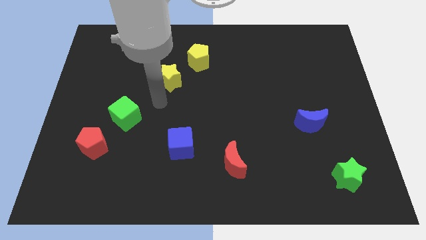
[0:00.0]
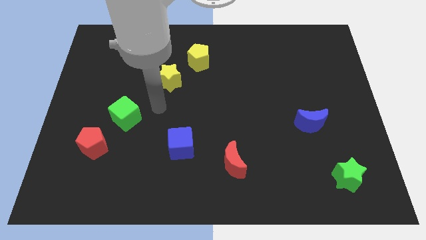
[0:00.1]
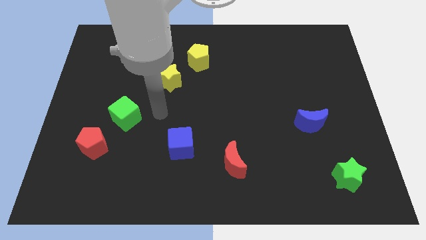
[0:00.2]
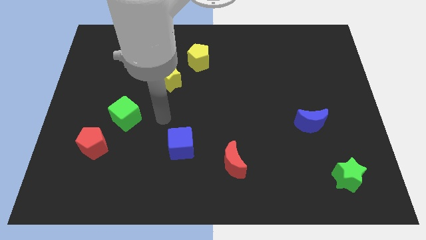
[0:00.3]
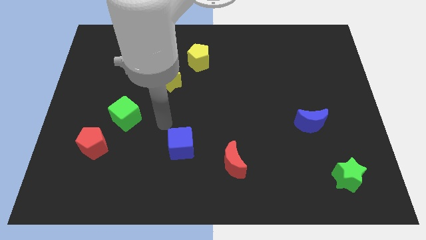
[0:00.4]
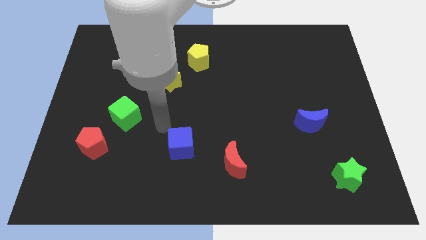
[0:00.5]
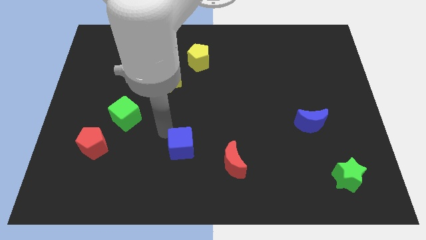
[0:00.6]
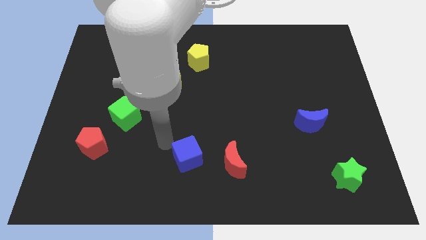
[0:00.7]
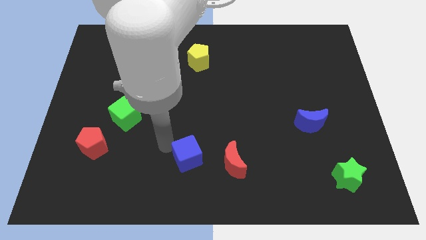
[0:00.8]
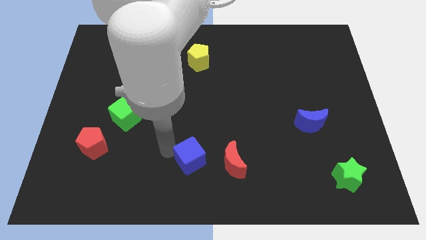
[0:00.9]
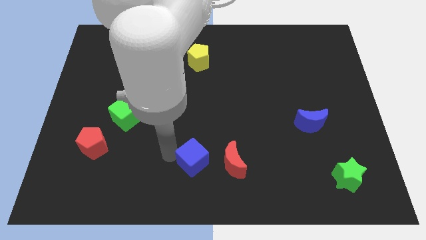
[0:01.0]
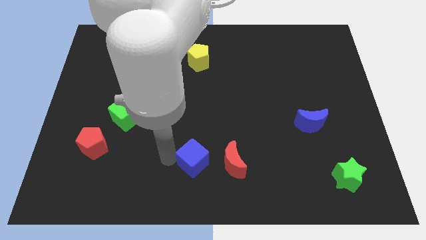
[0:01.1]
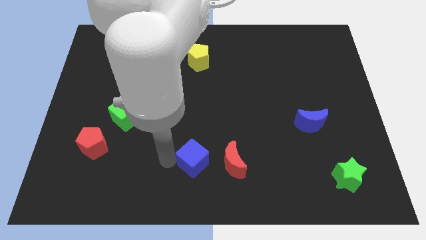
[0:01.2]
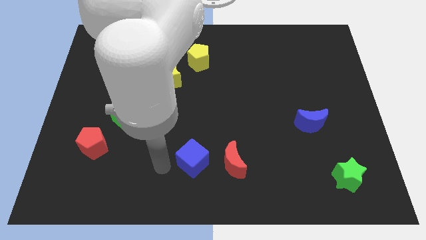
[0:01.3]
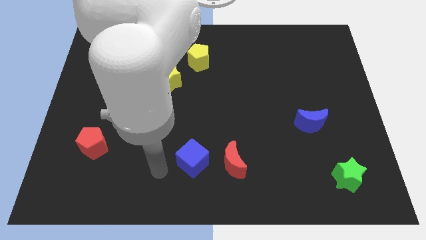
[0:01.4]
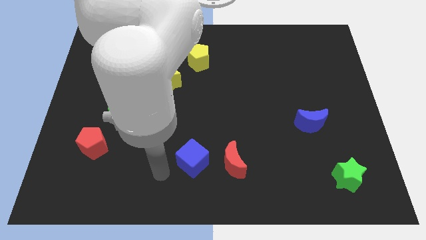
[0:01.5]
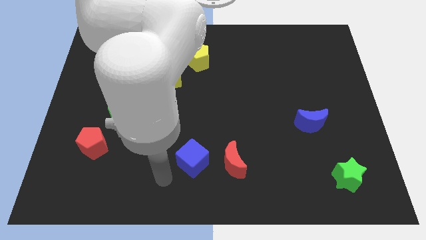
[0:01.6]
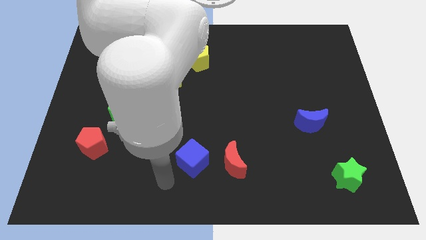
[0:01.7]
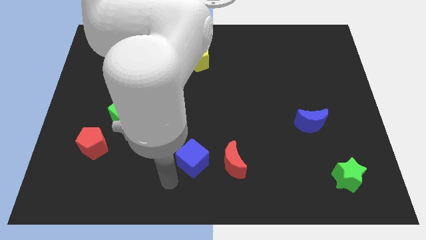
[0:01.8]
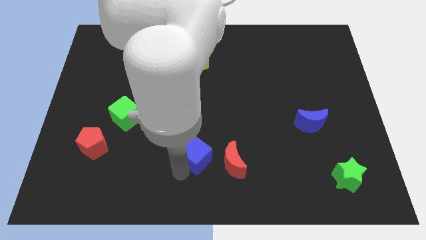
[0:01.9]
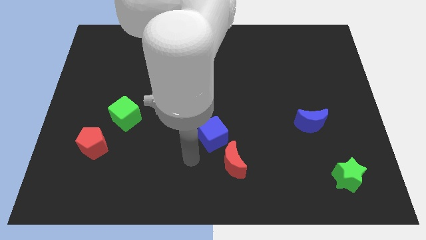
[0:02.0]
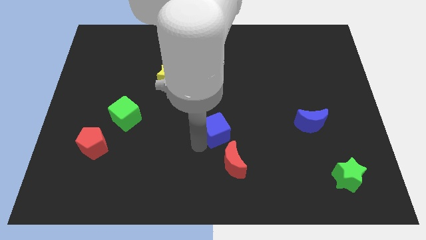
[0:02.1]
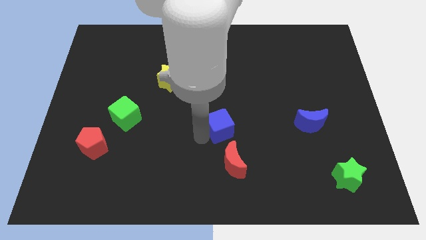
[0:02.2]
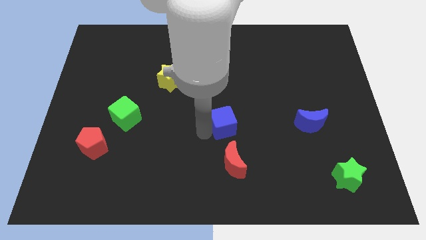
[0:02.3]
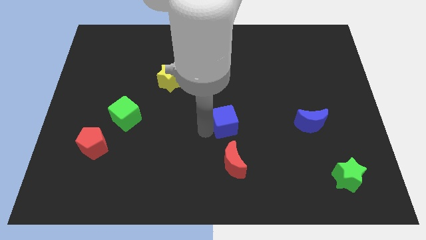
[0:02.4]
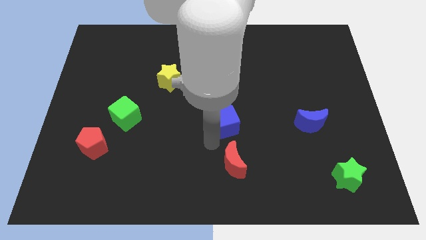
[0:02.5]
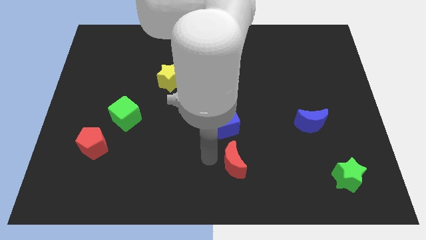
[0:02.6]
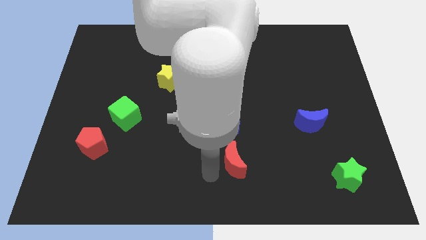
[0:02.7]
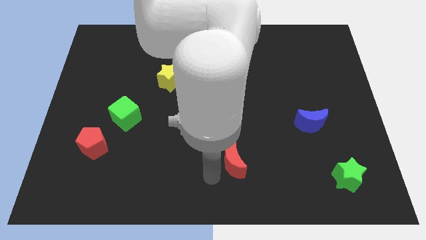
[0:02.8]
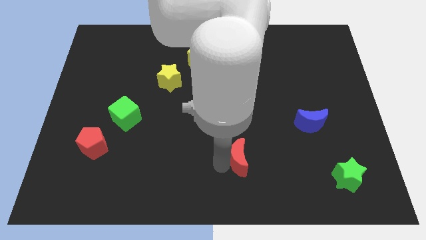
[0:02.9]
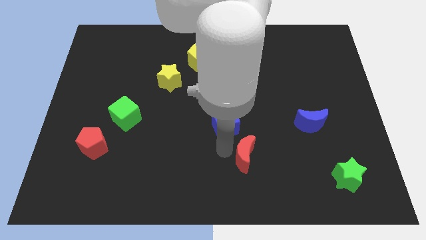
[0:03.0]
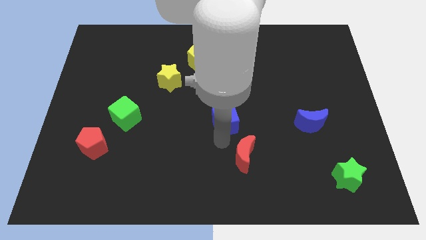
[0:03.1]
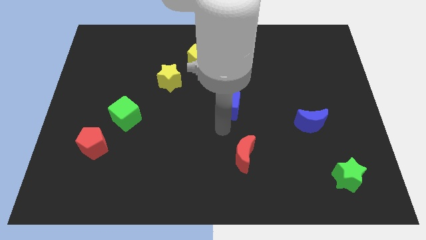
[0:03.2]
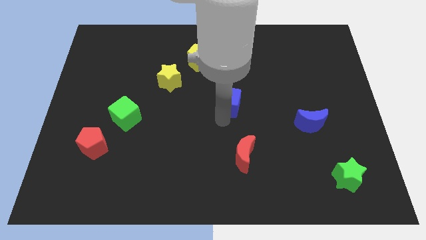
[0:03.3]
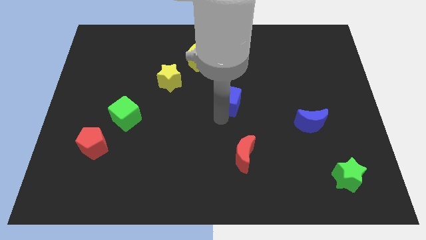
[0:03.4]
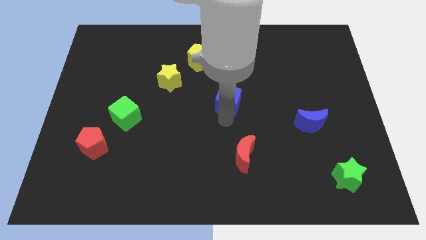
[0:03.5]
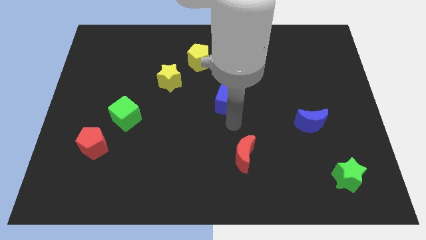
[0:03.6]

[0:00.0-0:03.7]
place the blue cube above the red moon

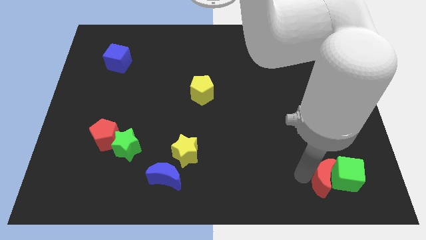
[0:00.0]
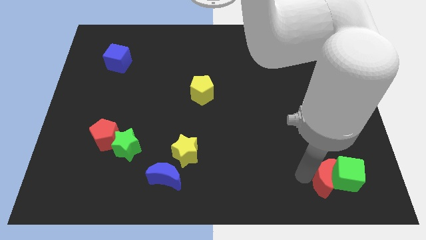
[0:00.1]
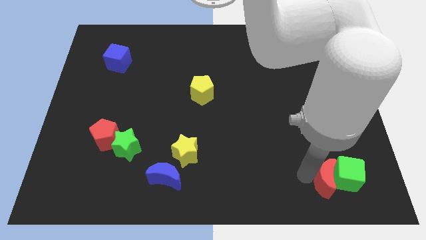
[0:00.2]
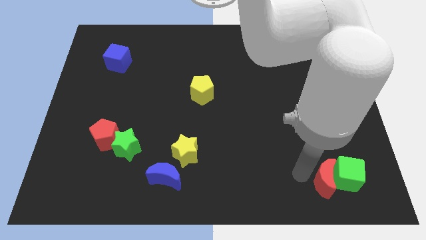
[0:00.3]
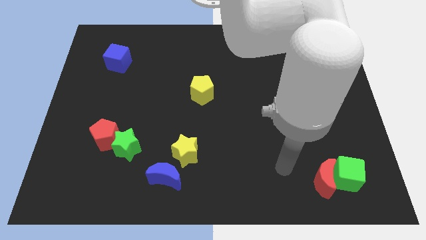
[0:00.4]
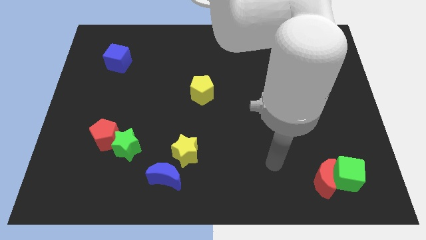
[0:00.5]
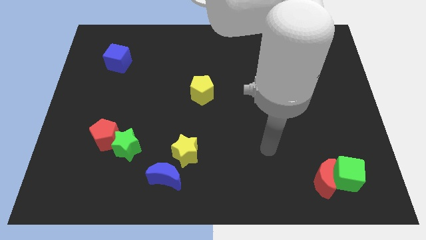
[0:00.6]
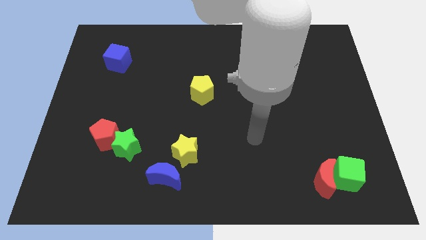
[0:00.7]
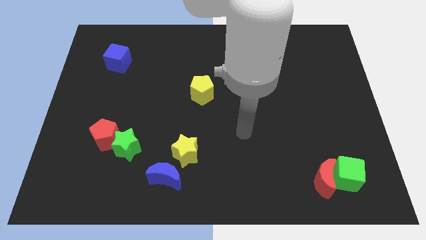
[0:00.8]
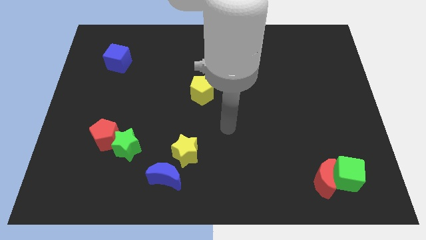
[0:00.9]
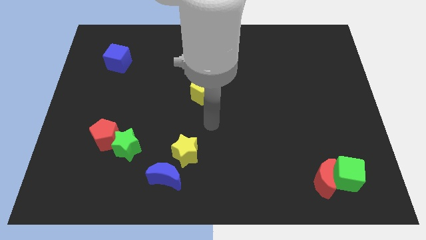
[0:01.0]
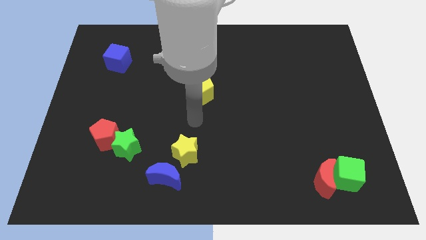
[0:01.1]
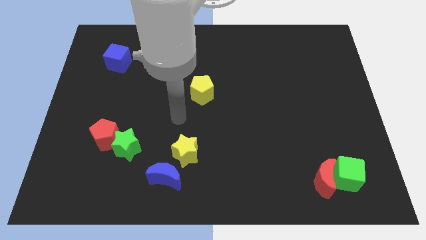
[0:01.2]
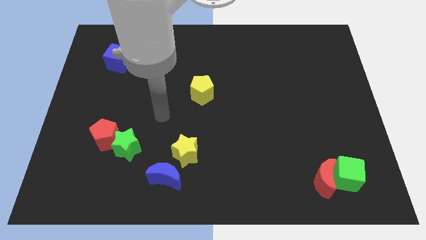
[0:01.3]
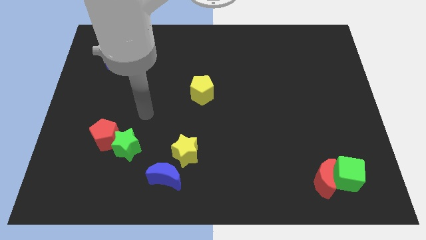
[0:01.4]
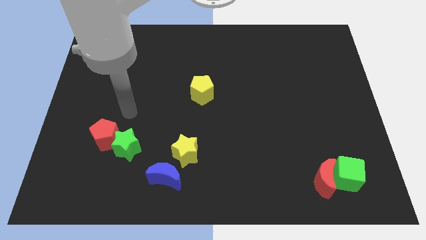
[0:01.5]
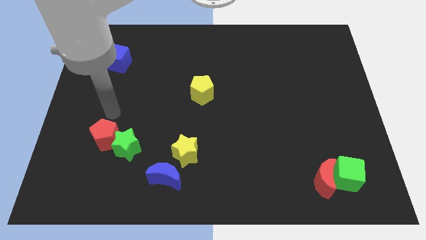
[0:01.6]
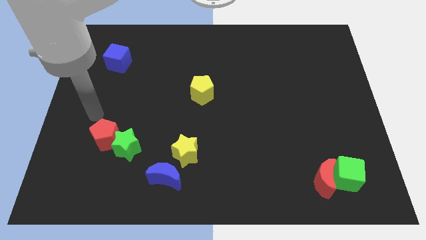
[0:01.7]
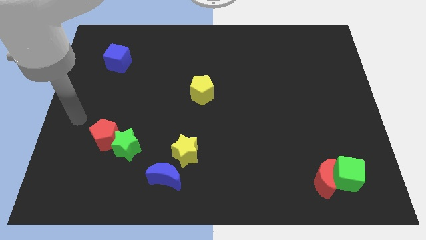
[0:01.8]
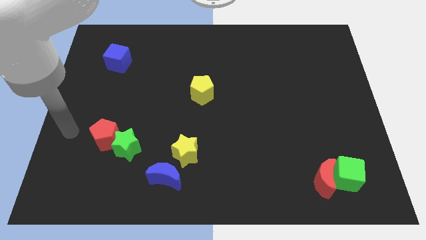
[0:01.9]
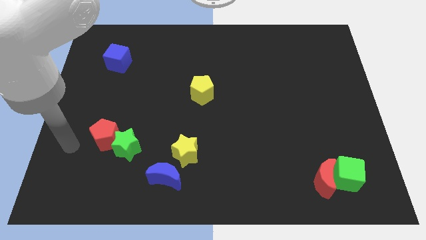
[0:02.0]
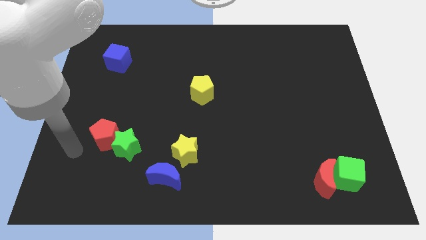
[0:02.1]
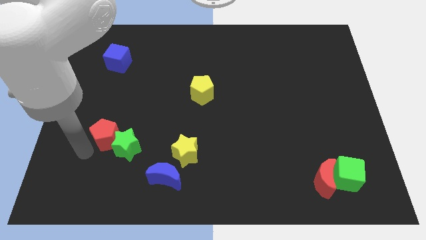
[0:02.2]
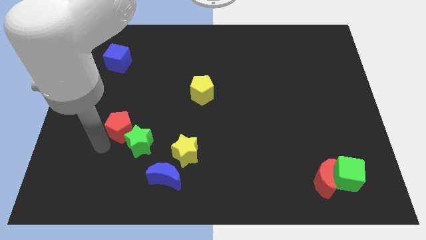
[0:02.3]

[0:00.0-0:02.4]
move your arm from red crescent to red pentagon

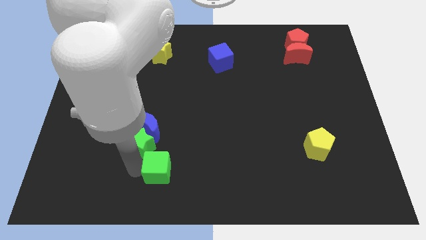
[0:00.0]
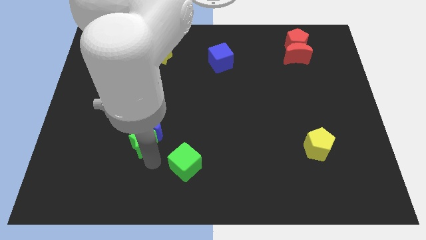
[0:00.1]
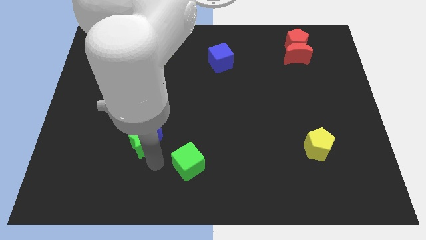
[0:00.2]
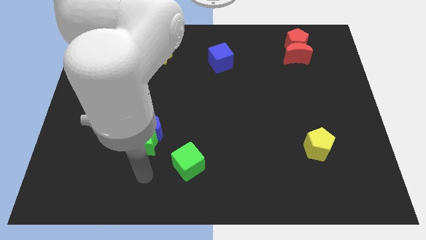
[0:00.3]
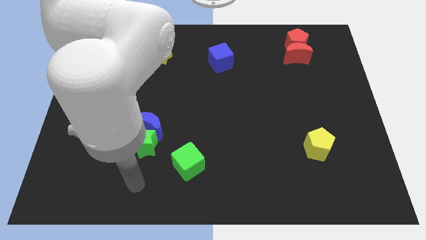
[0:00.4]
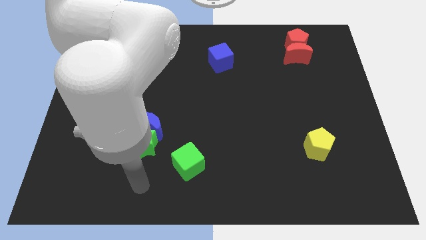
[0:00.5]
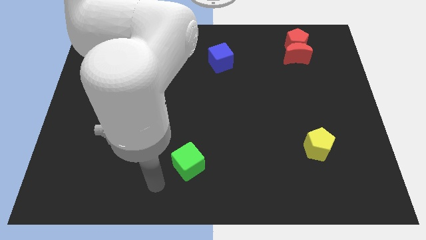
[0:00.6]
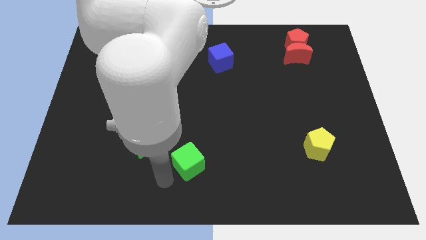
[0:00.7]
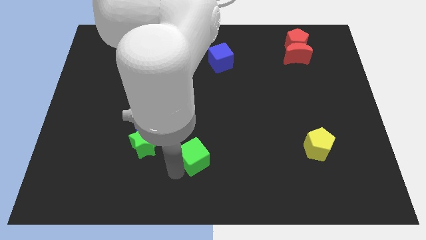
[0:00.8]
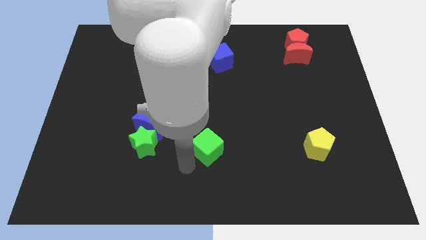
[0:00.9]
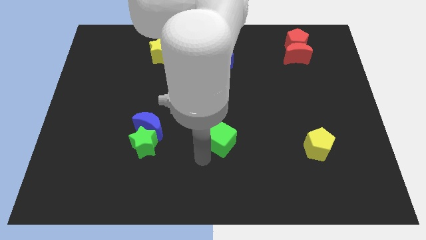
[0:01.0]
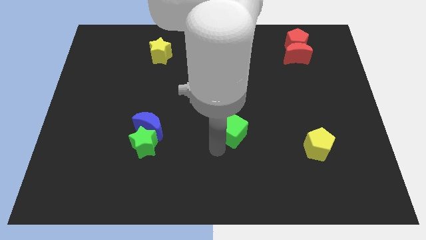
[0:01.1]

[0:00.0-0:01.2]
move green cube below the blue cube

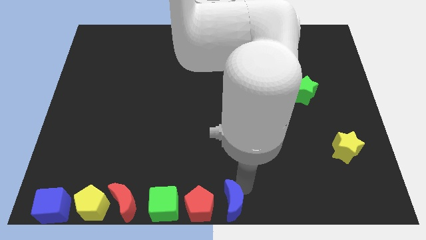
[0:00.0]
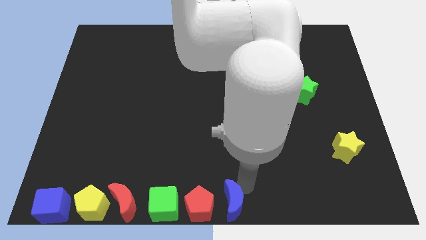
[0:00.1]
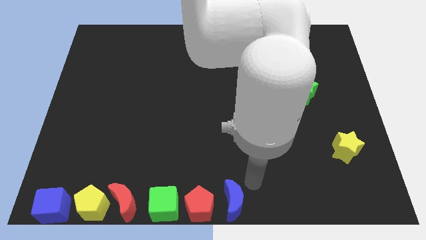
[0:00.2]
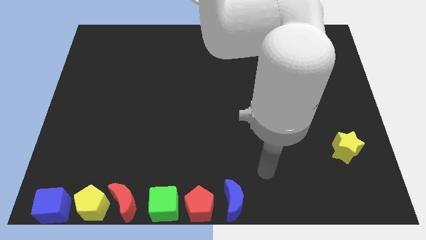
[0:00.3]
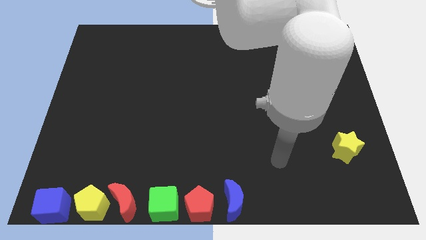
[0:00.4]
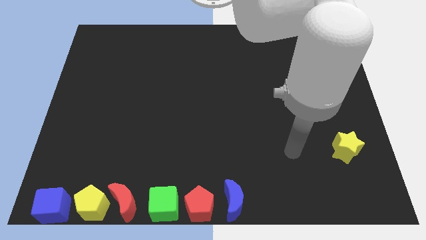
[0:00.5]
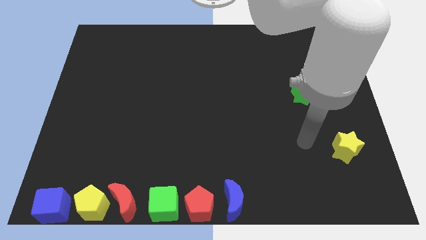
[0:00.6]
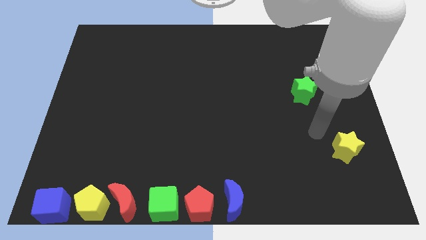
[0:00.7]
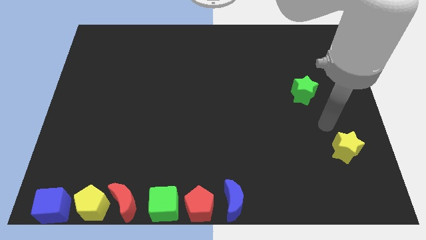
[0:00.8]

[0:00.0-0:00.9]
move the arm diagonally up between yellow and green stars

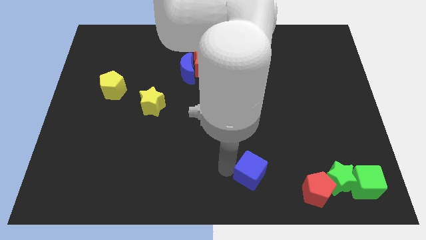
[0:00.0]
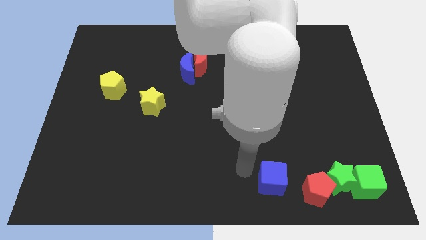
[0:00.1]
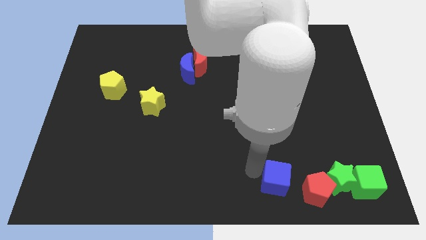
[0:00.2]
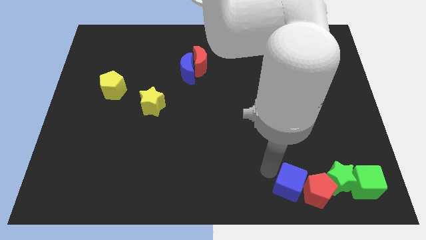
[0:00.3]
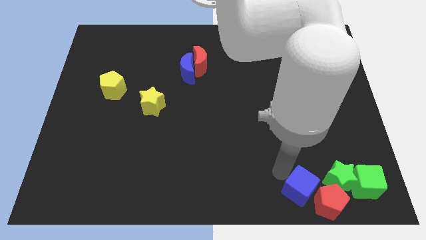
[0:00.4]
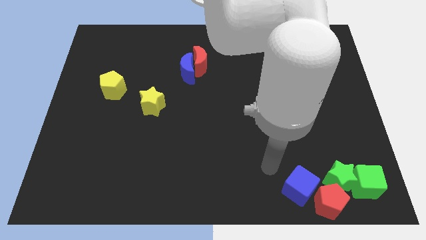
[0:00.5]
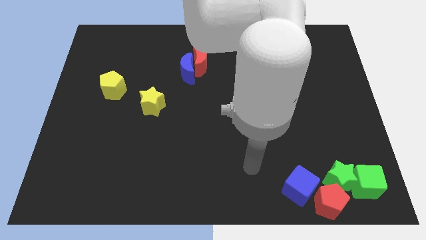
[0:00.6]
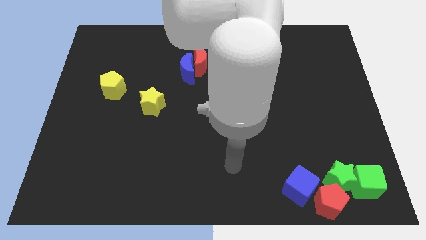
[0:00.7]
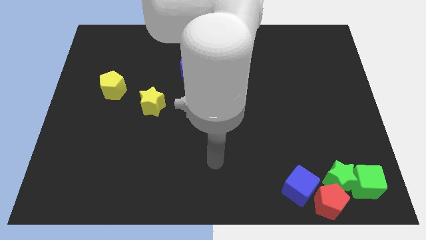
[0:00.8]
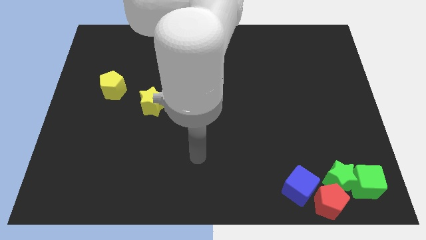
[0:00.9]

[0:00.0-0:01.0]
push the blue cube to the bottom right of the board
